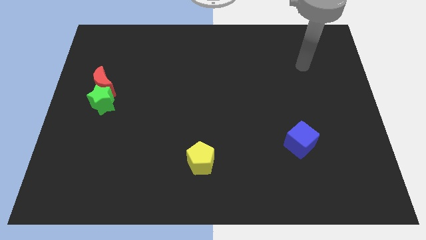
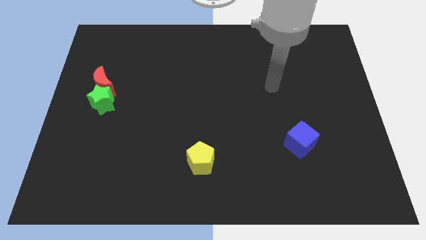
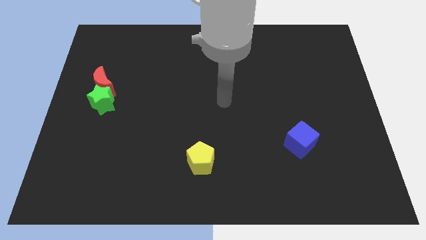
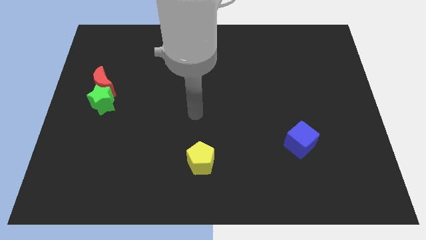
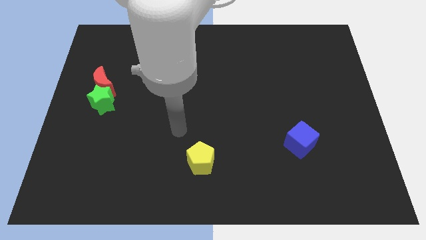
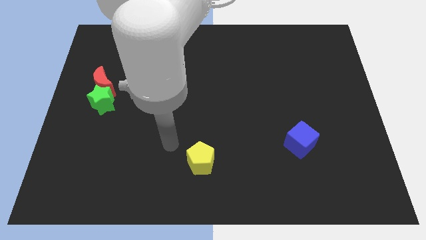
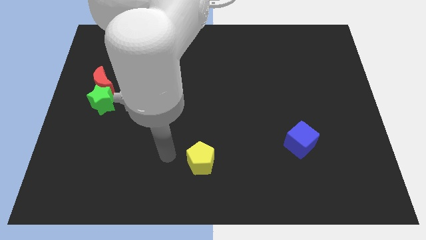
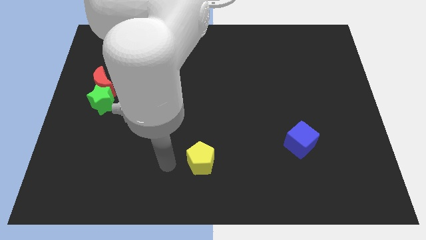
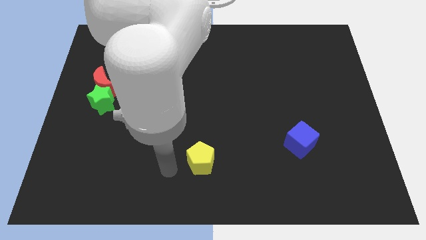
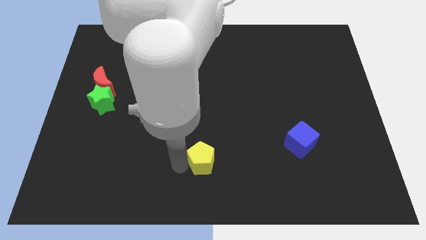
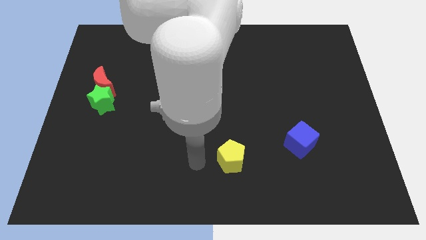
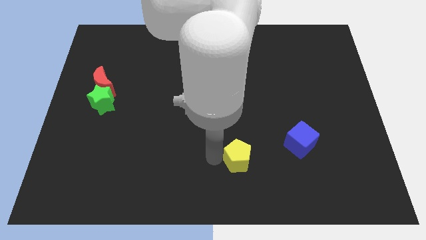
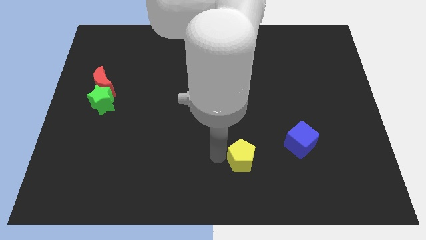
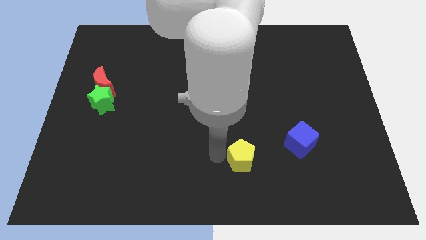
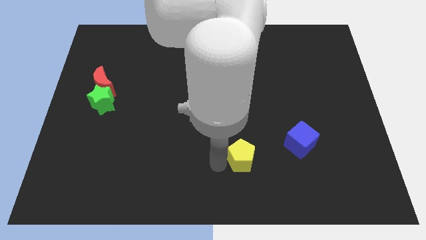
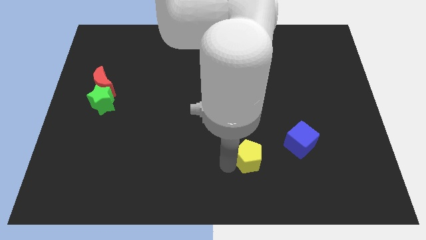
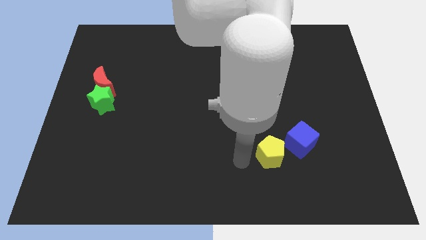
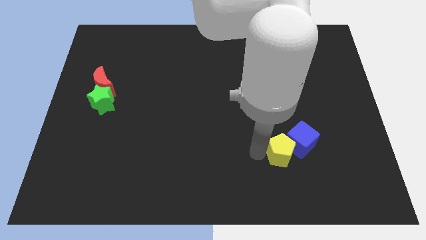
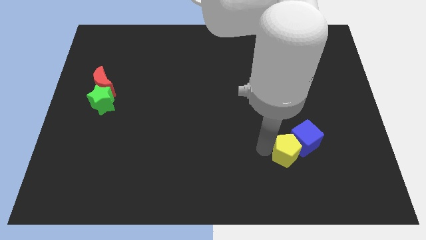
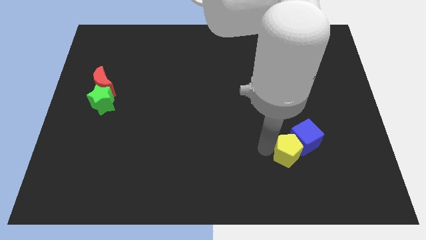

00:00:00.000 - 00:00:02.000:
move the pentagon next to the blue cube

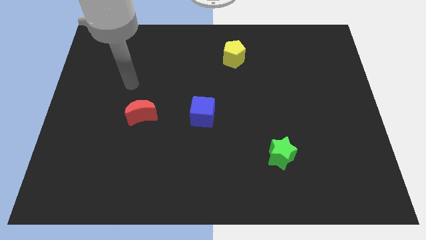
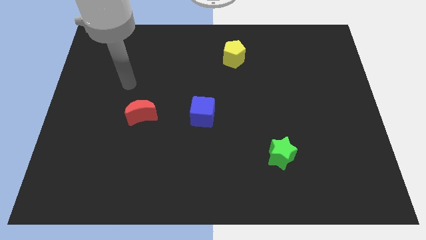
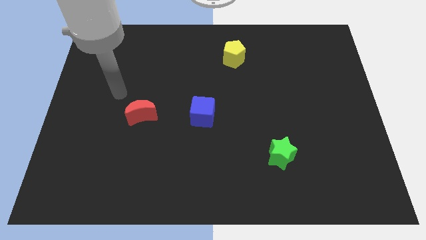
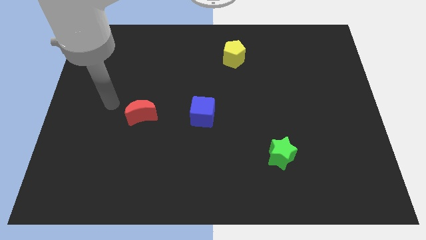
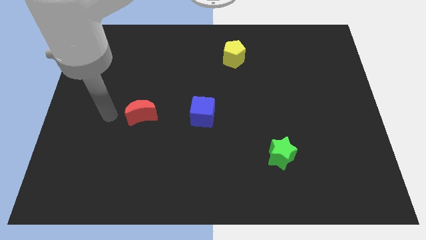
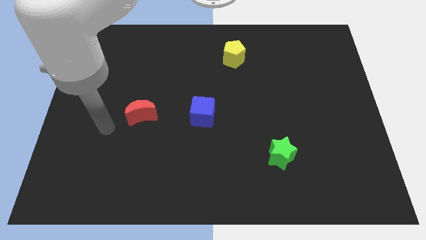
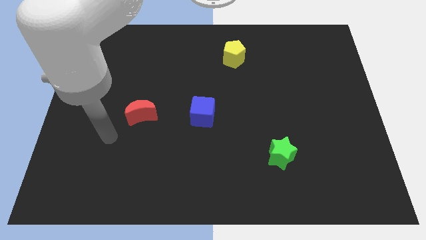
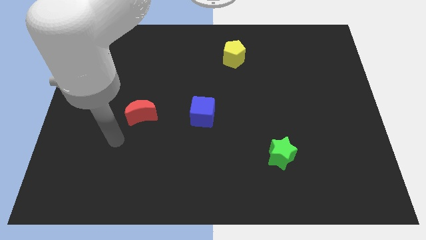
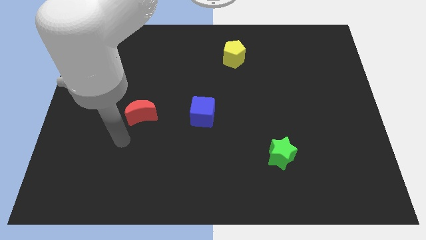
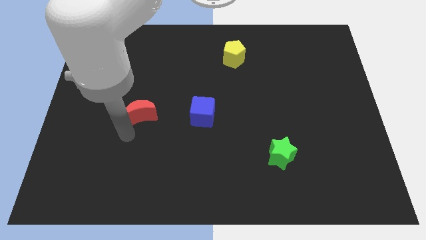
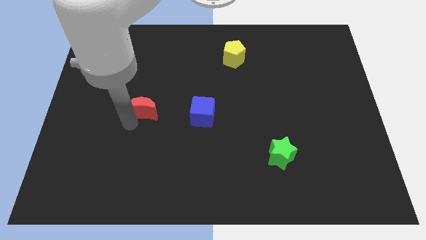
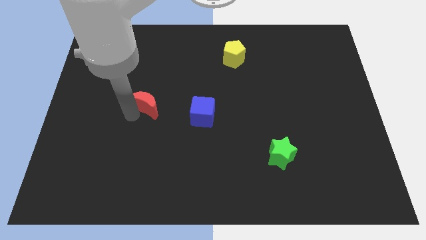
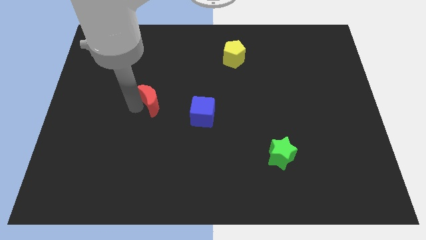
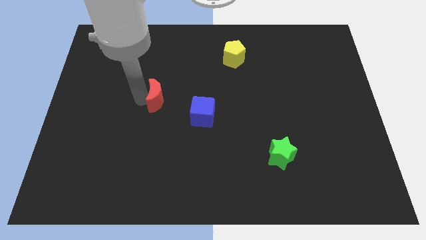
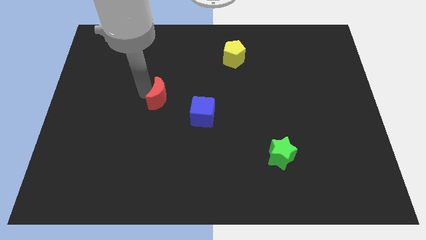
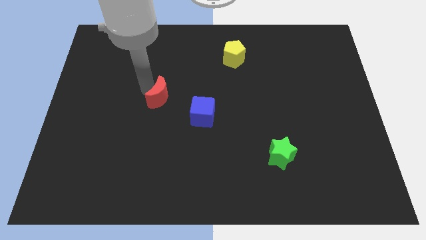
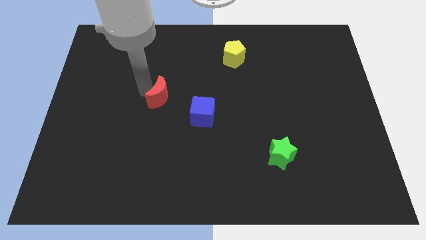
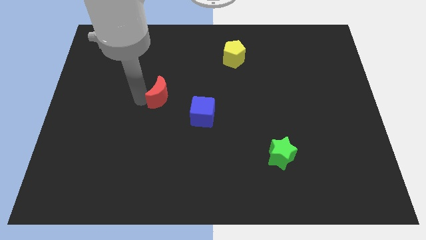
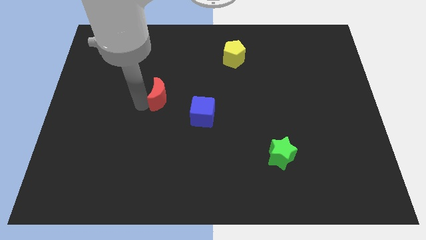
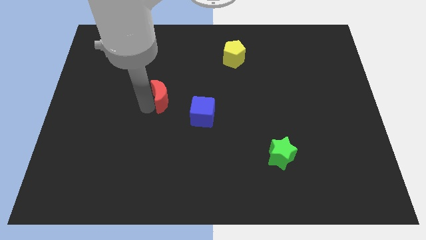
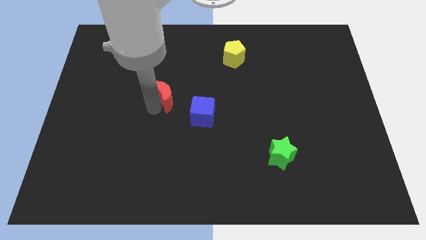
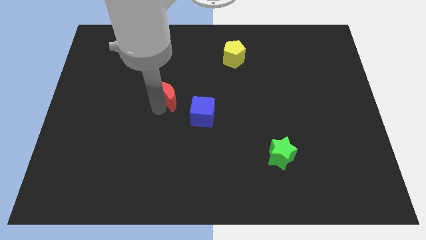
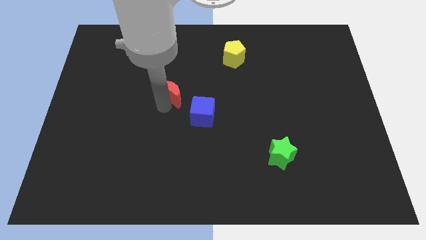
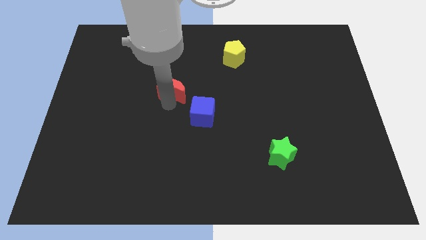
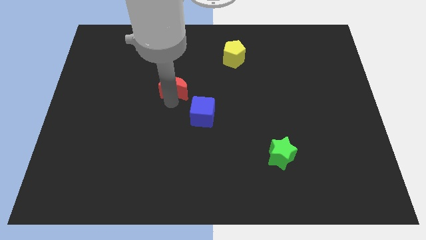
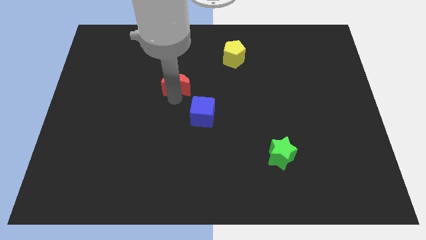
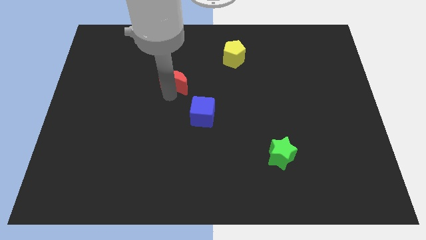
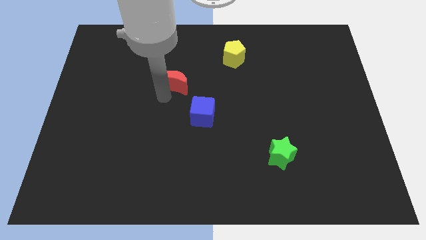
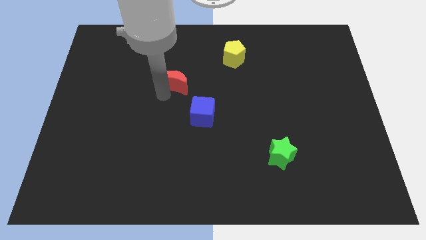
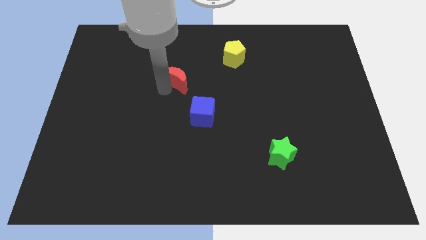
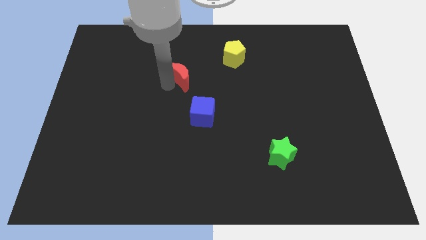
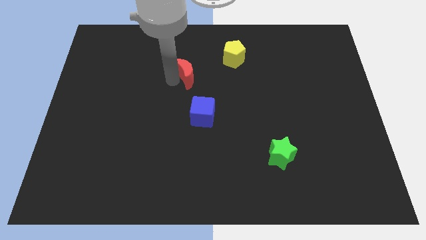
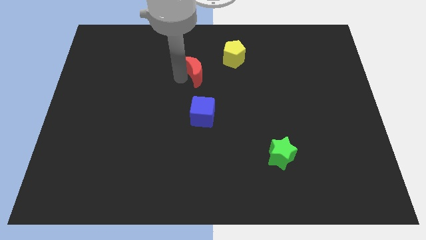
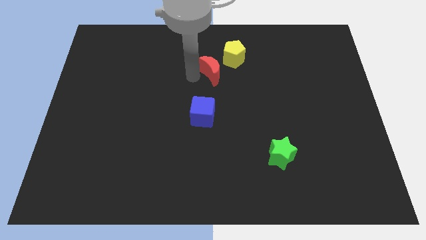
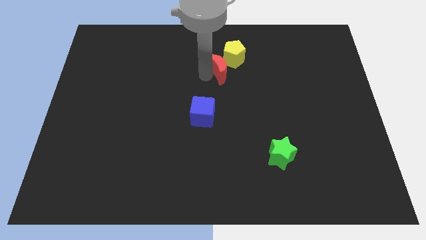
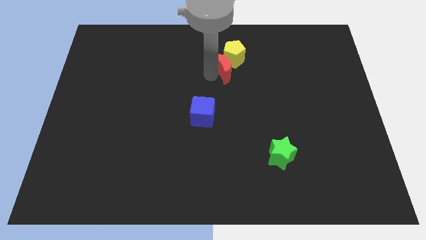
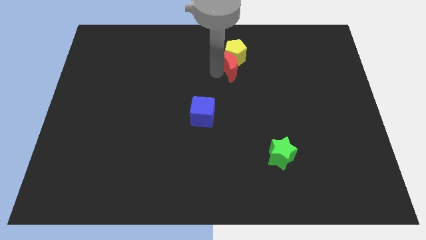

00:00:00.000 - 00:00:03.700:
slide the red block to the yellow block

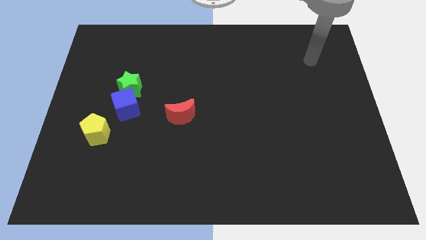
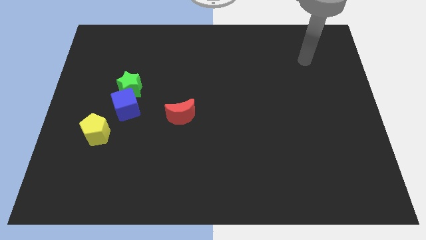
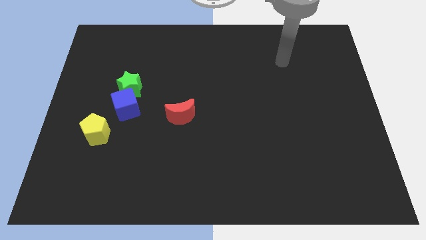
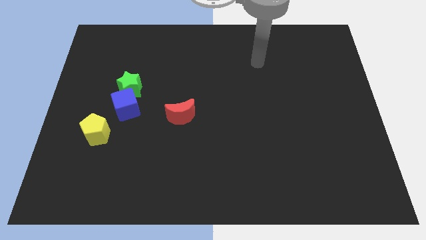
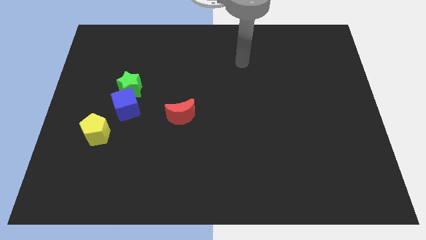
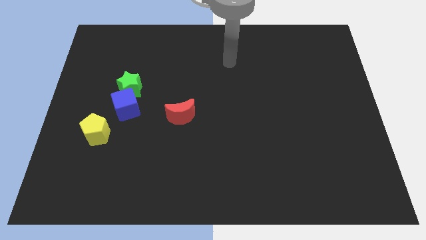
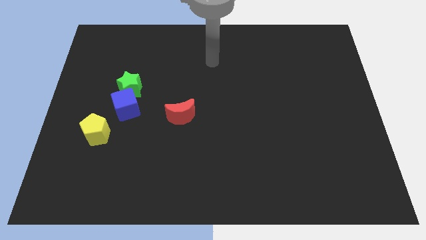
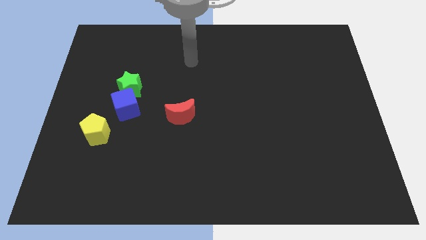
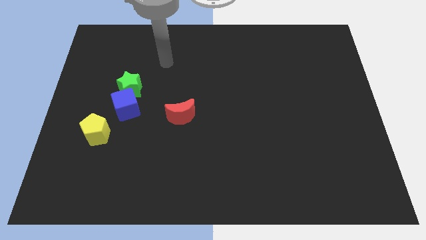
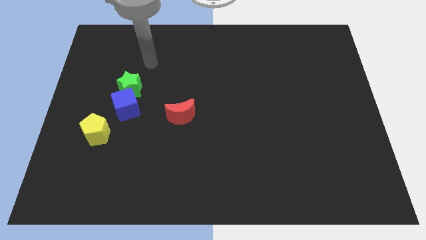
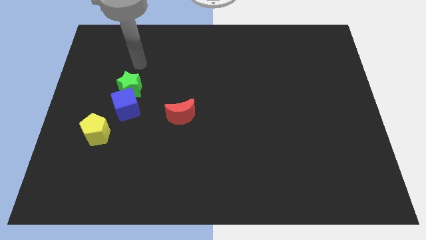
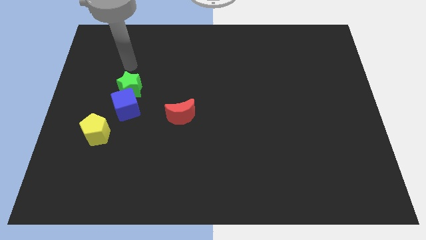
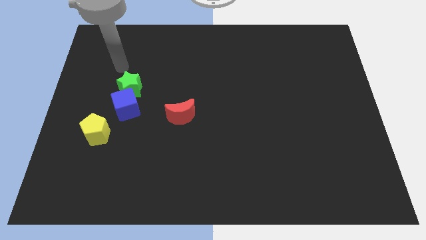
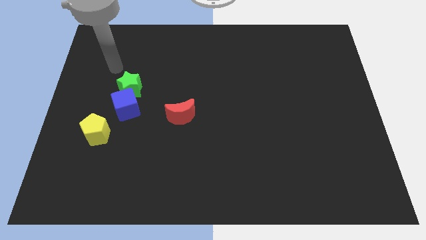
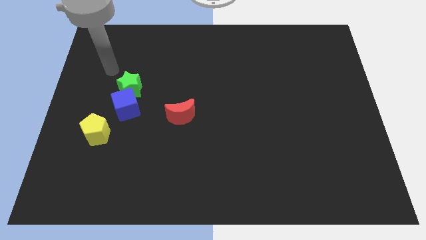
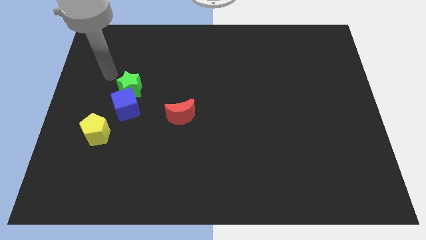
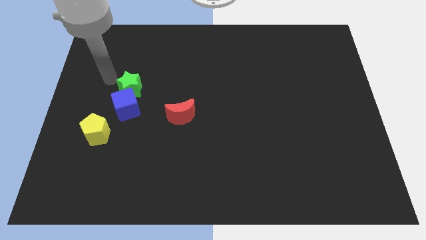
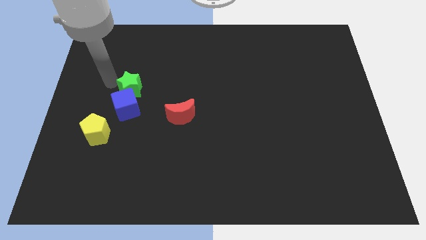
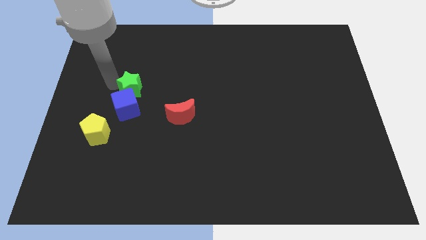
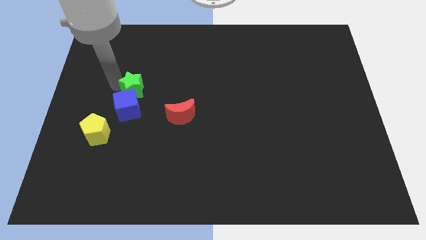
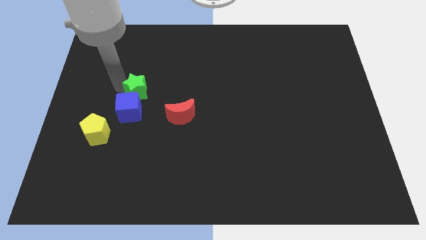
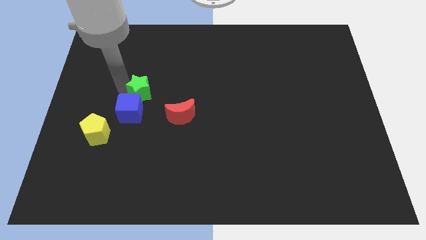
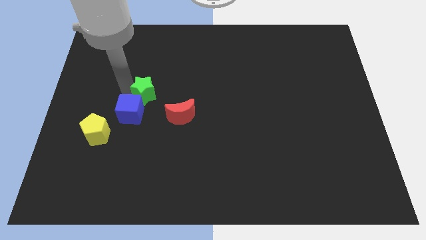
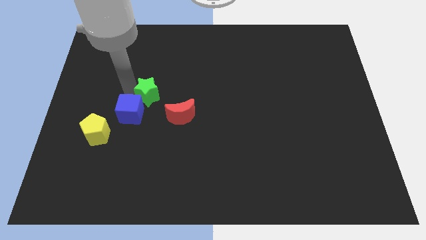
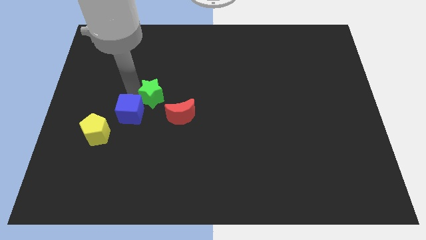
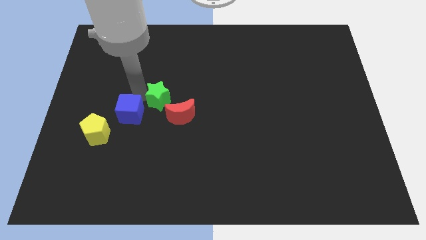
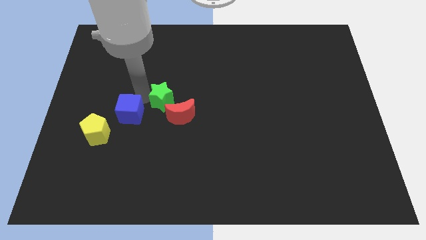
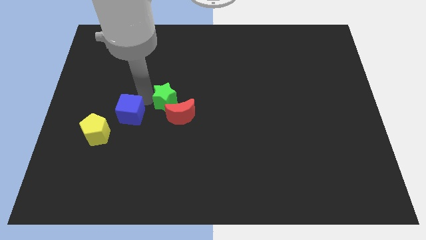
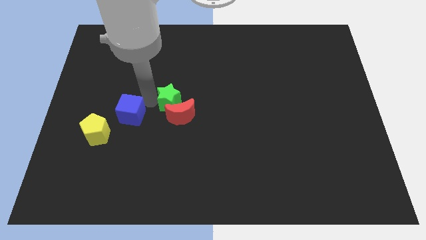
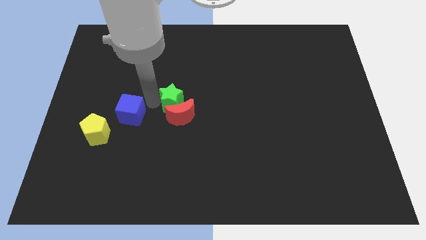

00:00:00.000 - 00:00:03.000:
push the green block to the red block

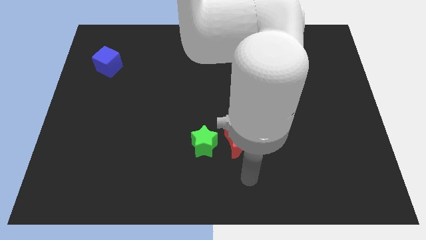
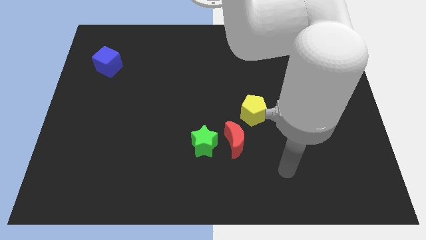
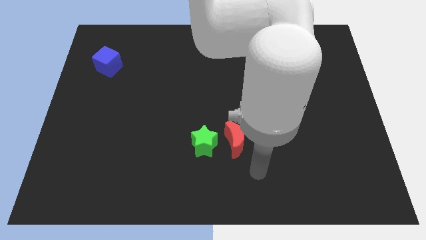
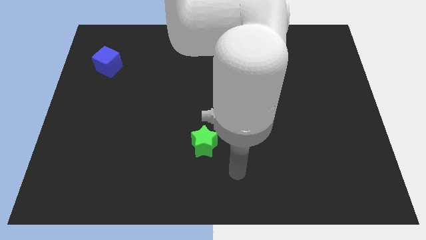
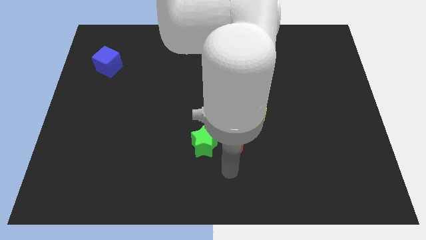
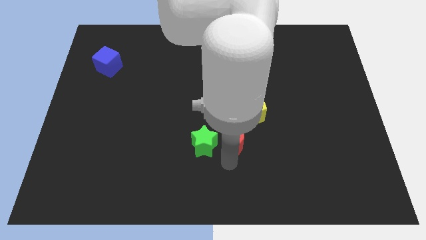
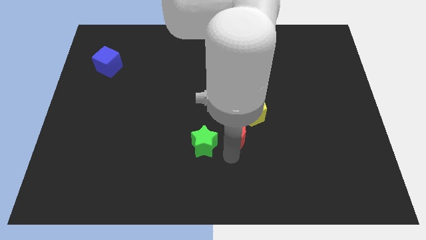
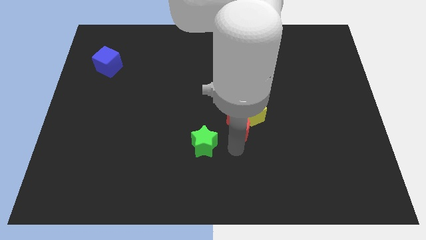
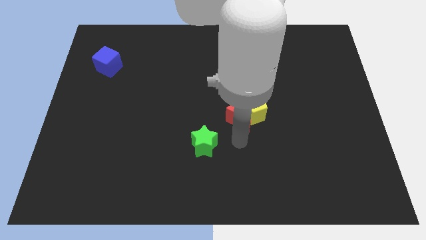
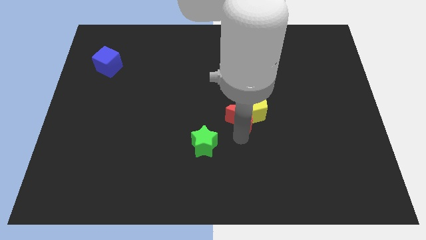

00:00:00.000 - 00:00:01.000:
slide the red moon to the yellow block
